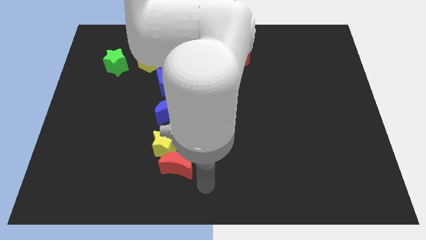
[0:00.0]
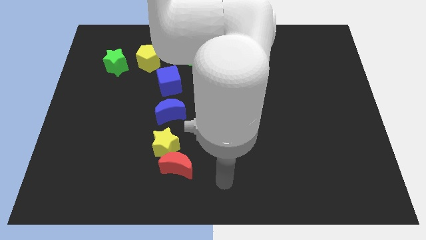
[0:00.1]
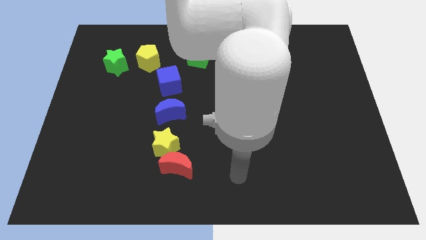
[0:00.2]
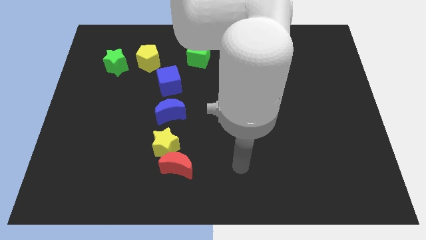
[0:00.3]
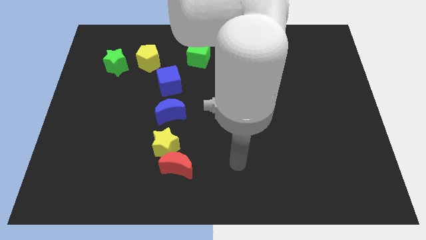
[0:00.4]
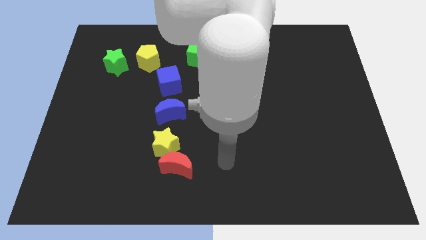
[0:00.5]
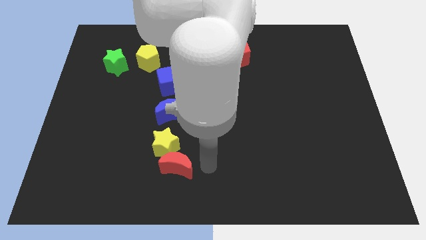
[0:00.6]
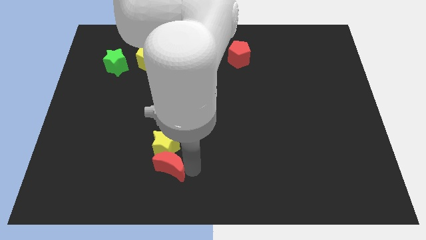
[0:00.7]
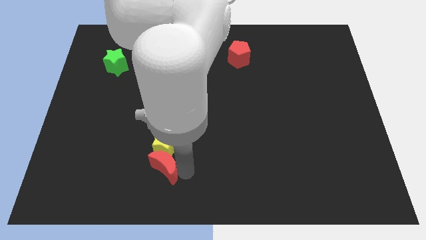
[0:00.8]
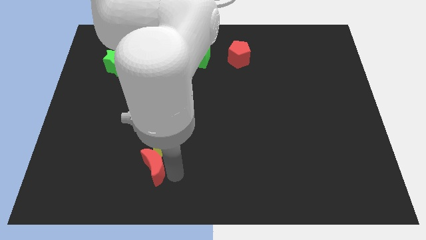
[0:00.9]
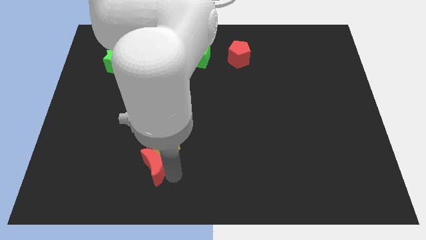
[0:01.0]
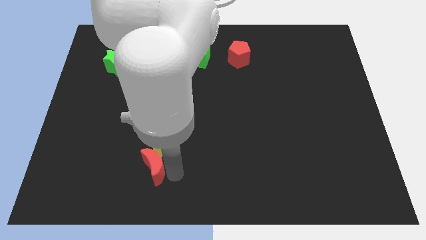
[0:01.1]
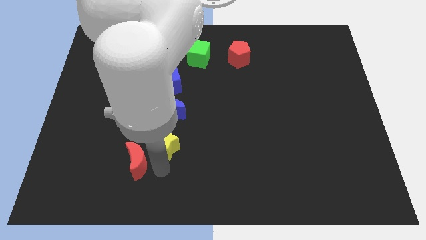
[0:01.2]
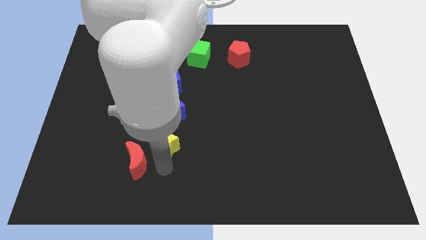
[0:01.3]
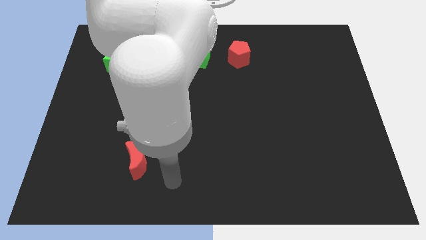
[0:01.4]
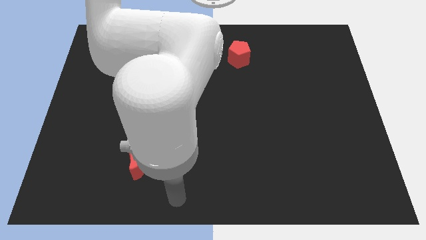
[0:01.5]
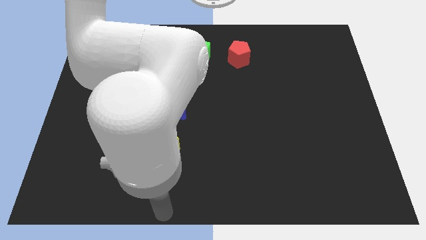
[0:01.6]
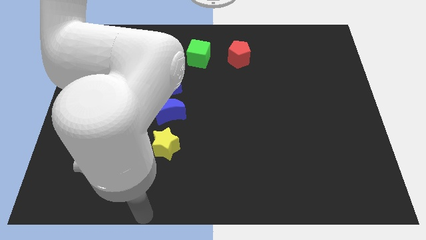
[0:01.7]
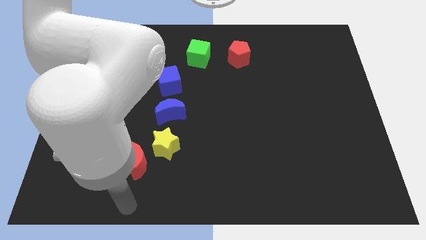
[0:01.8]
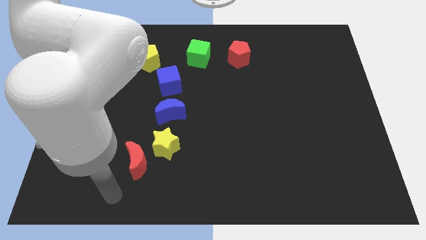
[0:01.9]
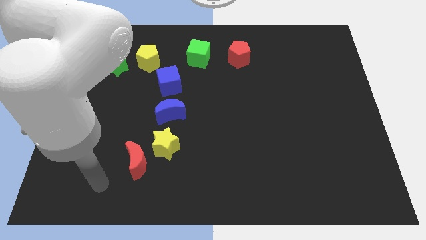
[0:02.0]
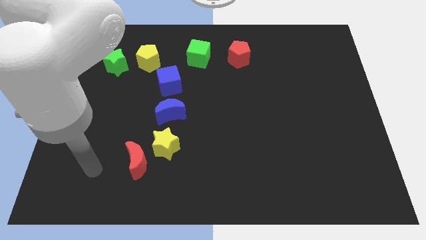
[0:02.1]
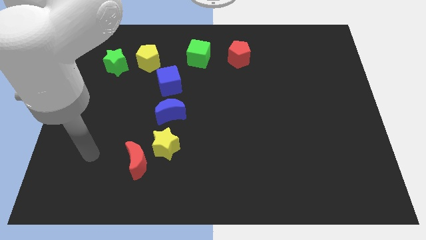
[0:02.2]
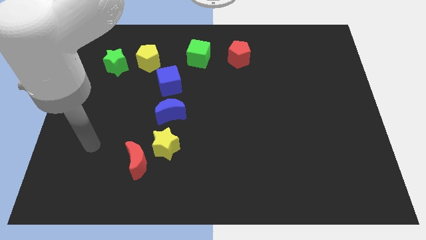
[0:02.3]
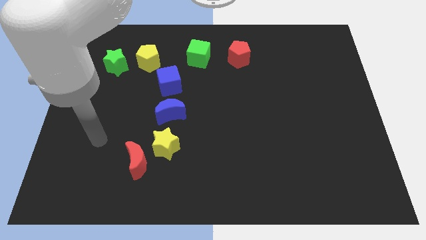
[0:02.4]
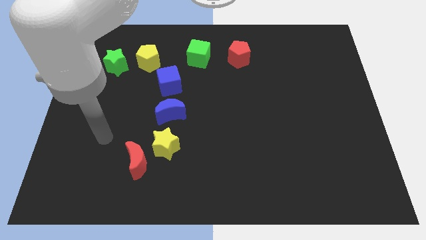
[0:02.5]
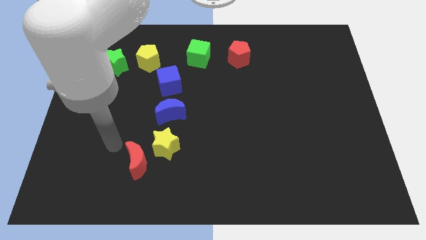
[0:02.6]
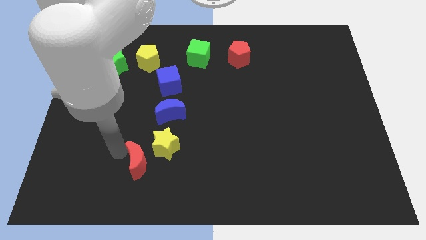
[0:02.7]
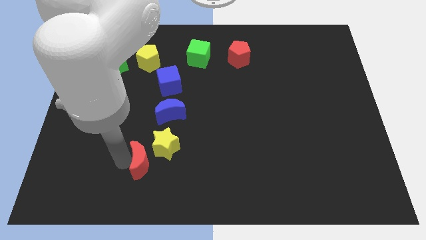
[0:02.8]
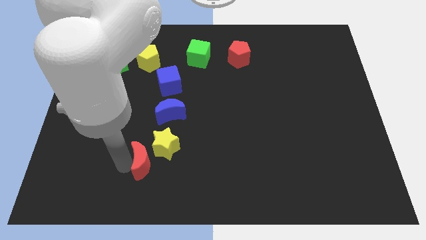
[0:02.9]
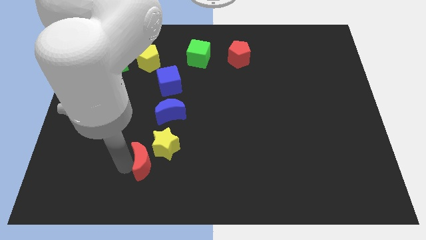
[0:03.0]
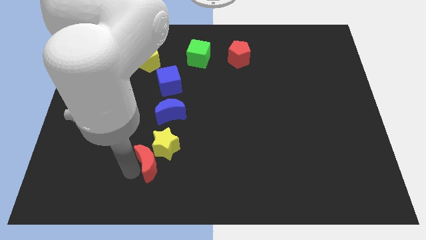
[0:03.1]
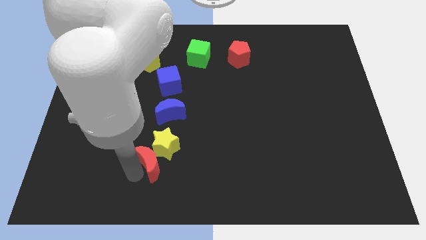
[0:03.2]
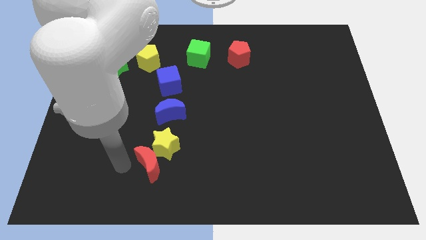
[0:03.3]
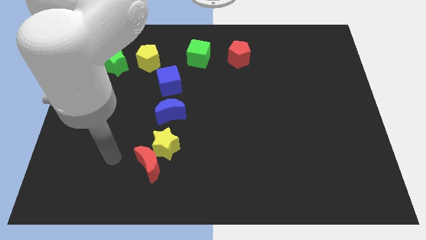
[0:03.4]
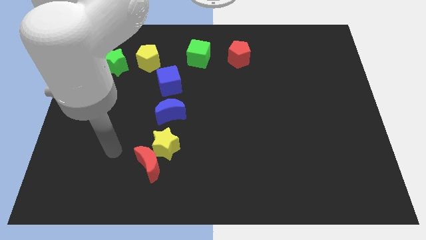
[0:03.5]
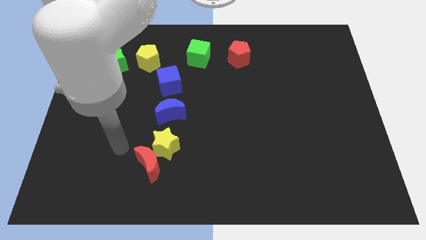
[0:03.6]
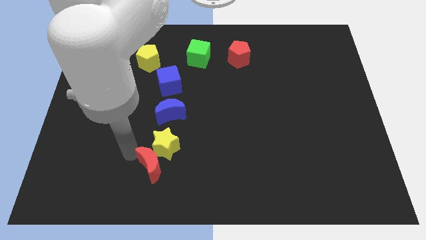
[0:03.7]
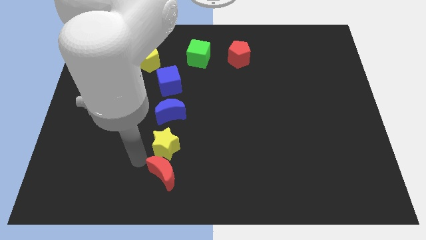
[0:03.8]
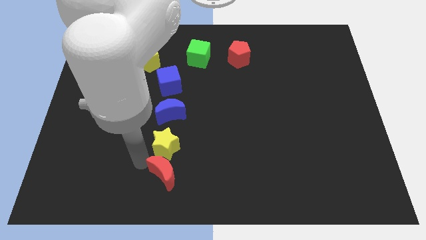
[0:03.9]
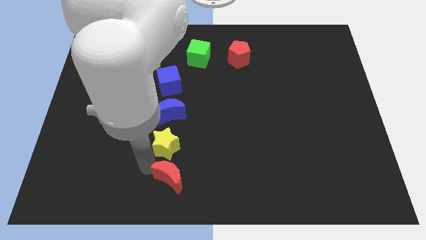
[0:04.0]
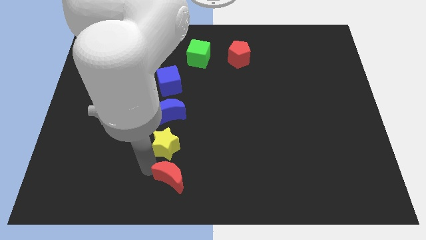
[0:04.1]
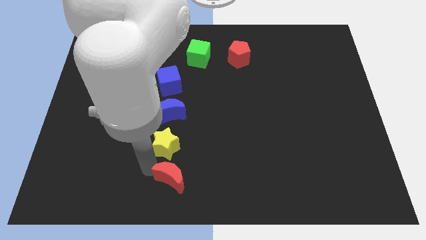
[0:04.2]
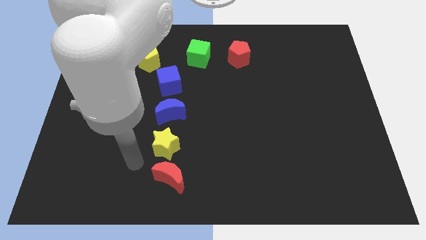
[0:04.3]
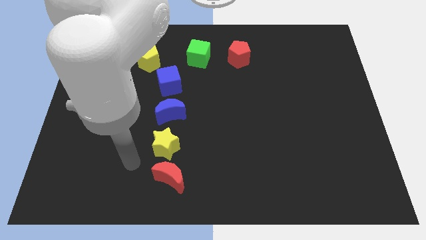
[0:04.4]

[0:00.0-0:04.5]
adjust the red moon to the bottom side of the yellow star

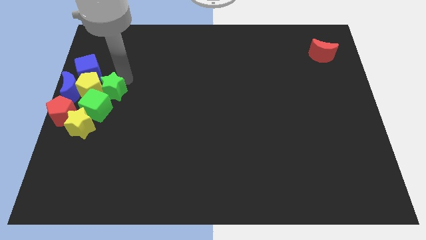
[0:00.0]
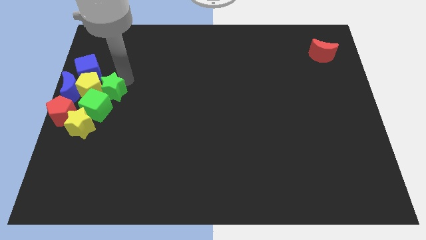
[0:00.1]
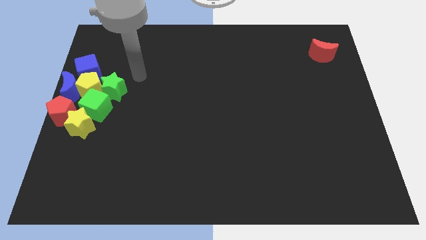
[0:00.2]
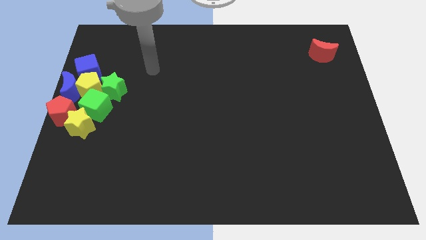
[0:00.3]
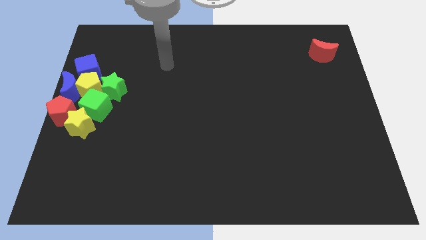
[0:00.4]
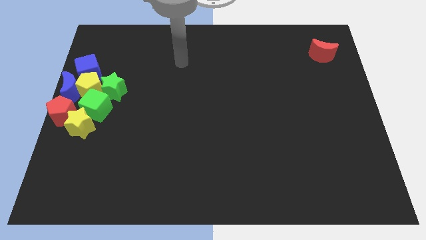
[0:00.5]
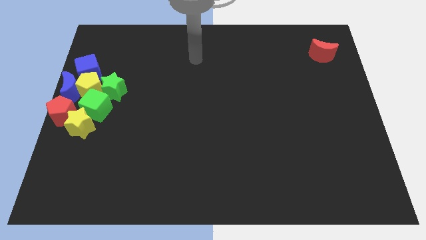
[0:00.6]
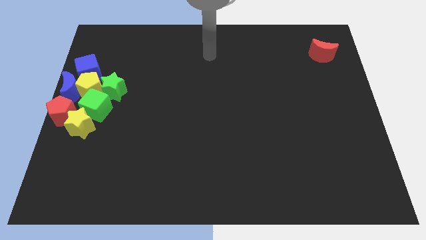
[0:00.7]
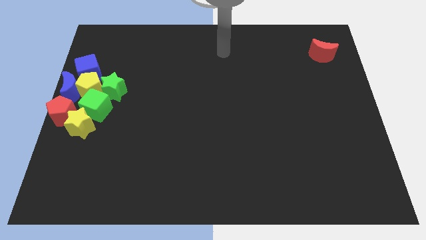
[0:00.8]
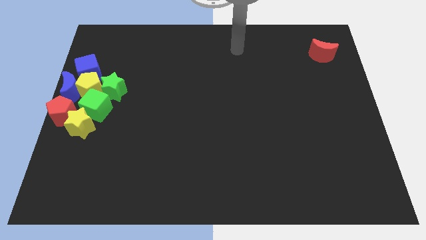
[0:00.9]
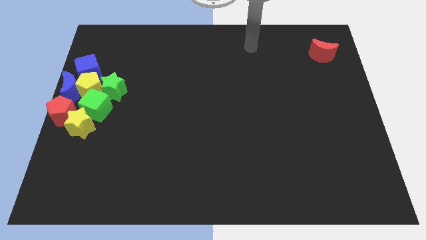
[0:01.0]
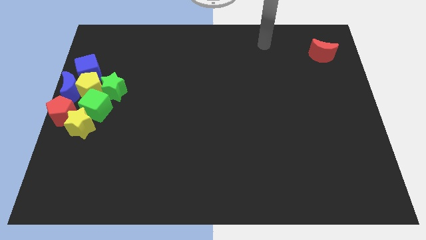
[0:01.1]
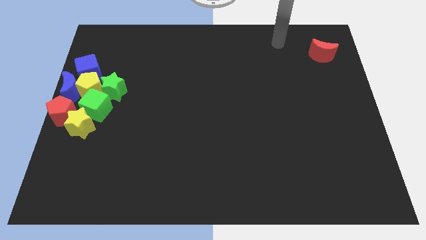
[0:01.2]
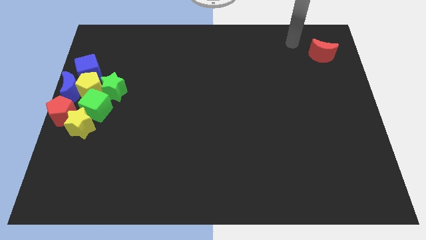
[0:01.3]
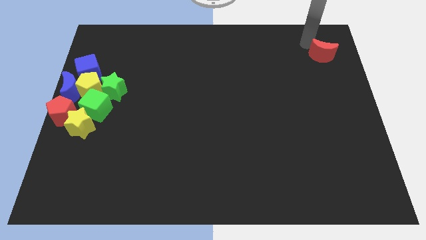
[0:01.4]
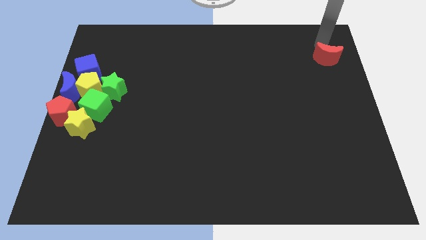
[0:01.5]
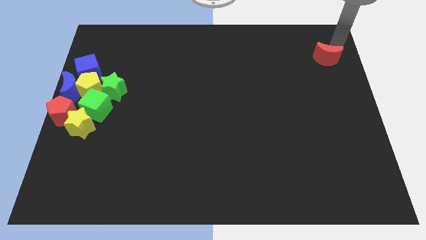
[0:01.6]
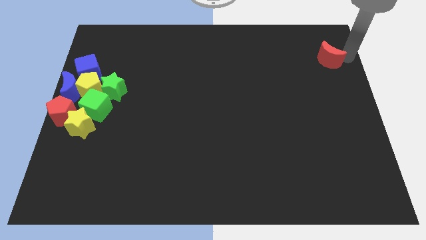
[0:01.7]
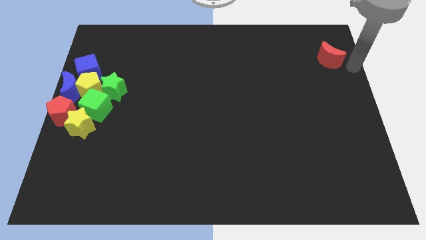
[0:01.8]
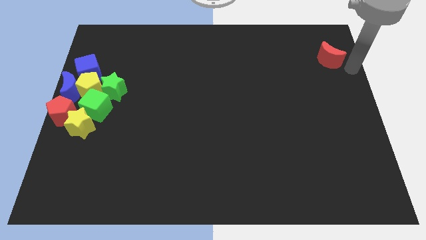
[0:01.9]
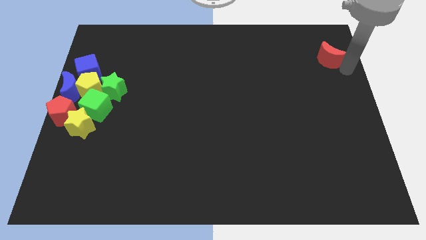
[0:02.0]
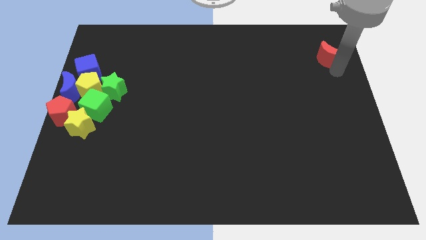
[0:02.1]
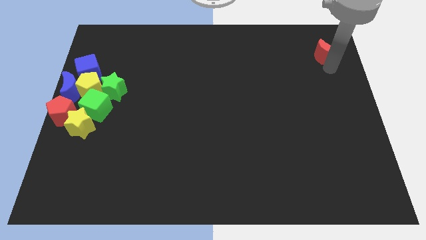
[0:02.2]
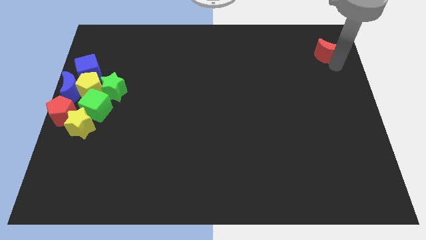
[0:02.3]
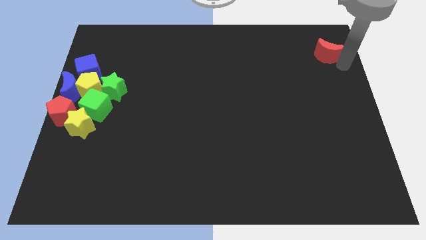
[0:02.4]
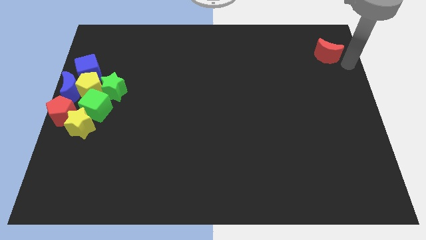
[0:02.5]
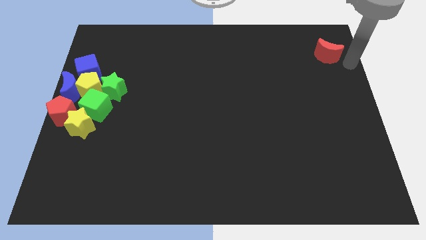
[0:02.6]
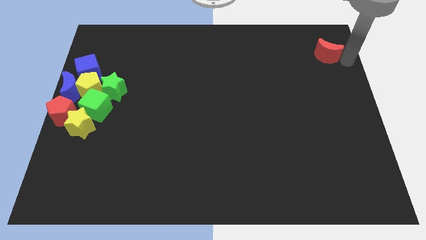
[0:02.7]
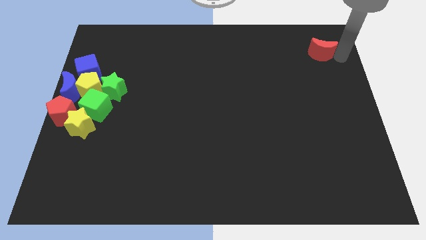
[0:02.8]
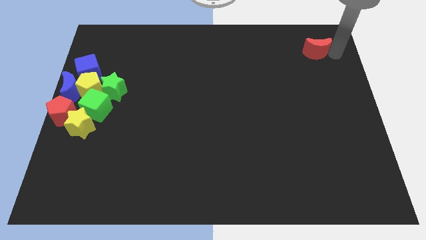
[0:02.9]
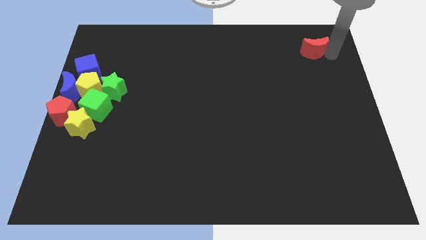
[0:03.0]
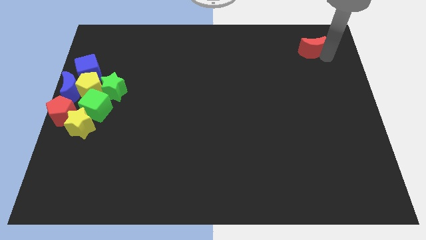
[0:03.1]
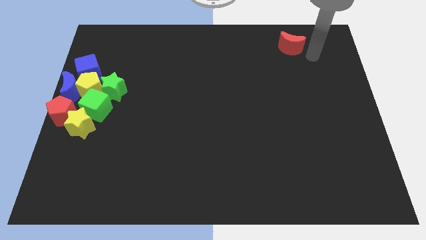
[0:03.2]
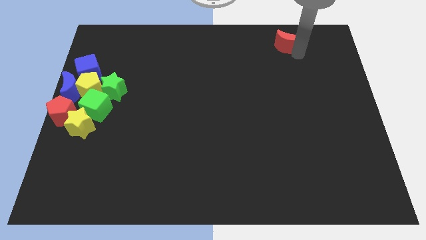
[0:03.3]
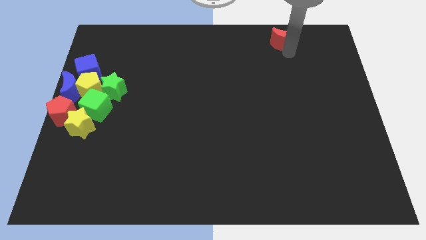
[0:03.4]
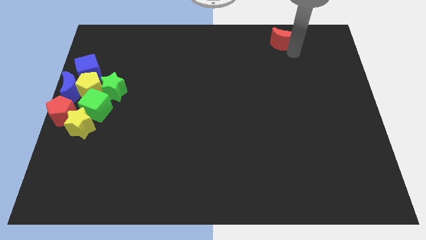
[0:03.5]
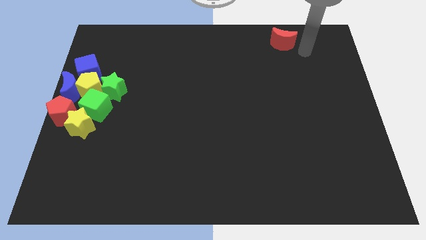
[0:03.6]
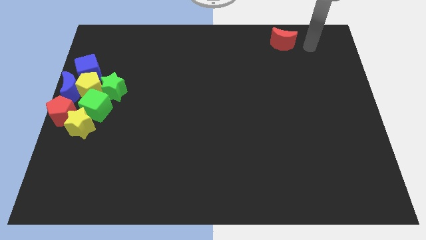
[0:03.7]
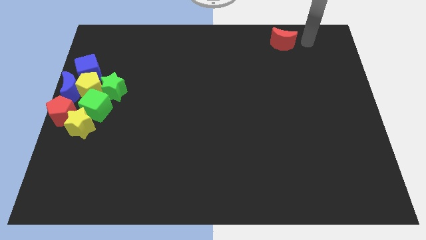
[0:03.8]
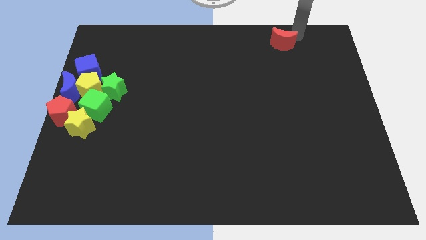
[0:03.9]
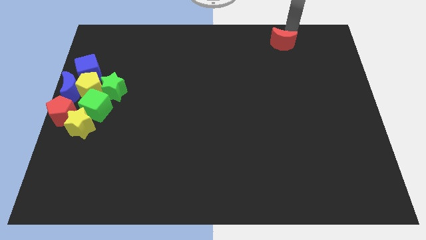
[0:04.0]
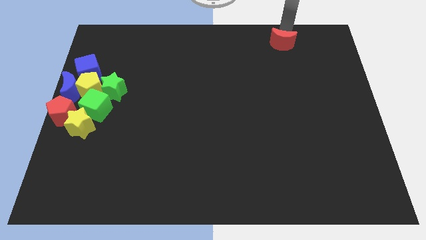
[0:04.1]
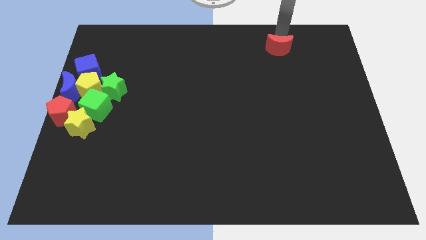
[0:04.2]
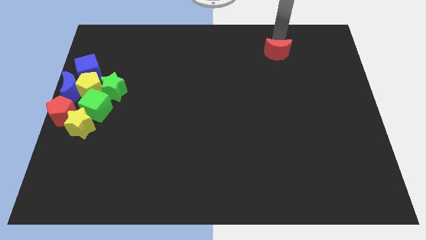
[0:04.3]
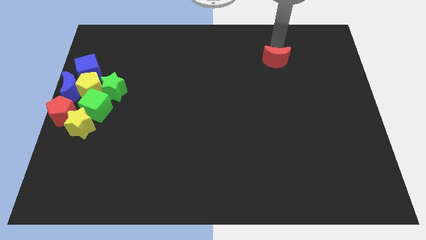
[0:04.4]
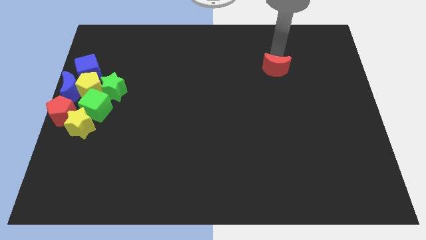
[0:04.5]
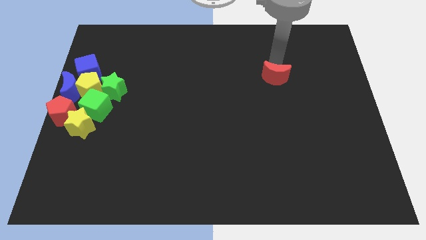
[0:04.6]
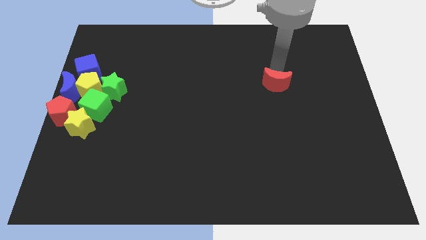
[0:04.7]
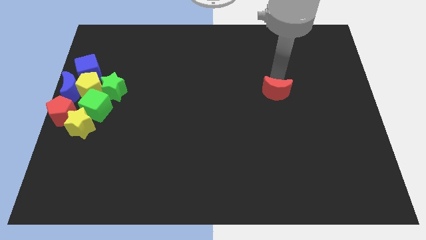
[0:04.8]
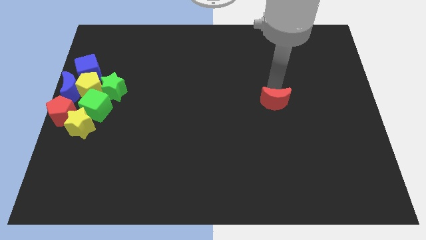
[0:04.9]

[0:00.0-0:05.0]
push the red crescent downwards
